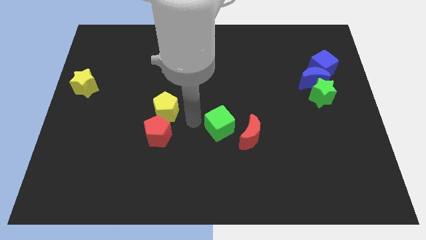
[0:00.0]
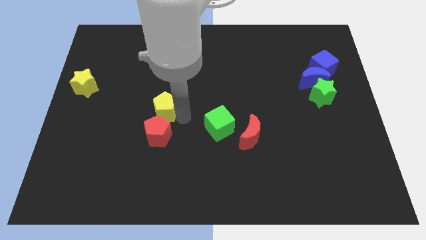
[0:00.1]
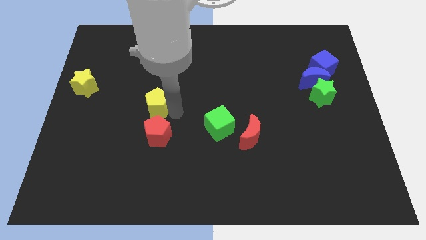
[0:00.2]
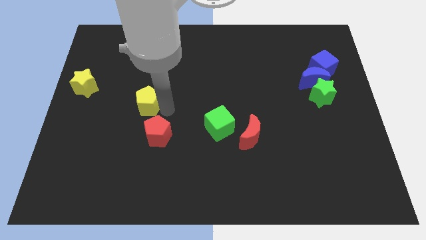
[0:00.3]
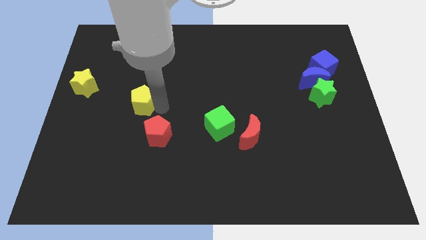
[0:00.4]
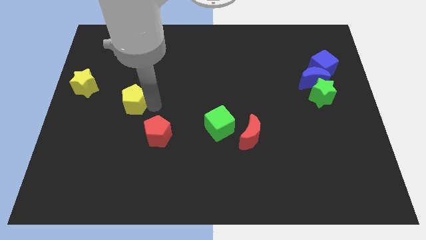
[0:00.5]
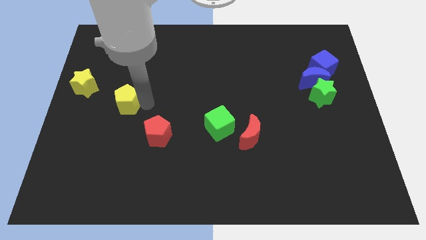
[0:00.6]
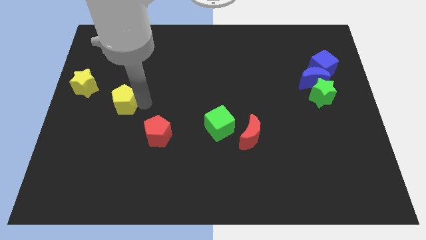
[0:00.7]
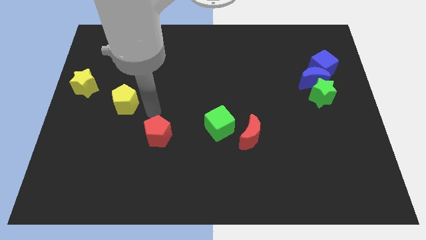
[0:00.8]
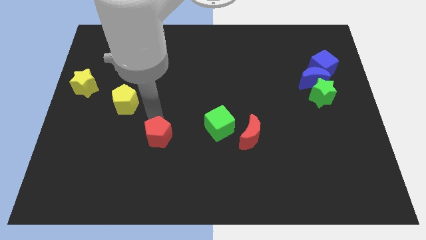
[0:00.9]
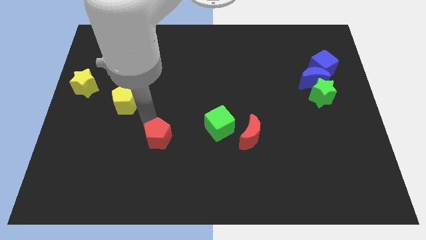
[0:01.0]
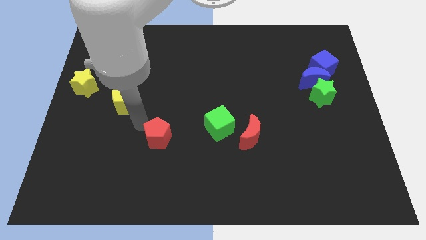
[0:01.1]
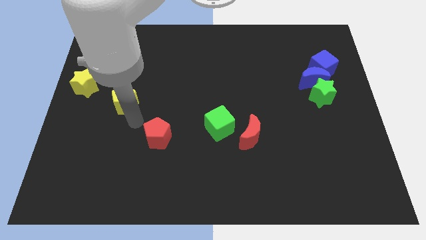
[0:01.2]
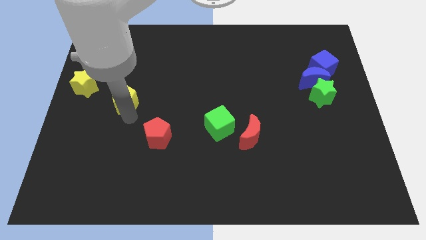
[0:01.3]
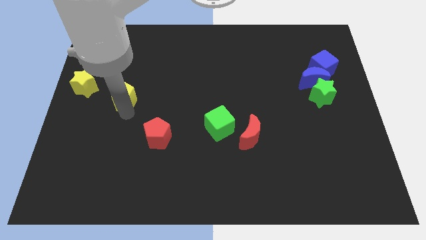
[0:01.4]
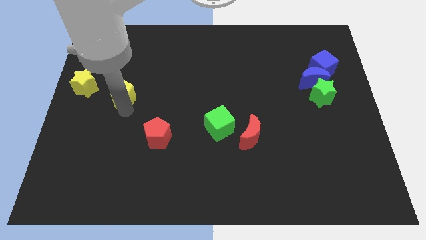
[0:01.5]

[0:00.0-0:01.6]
separate the yellow pentagon from the red pentagon

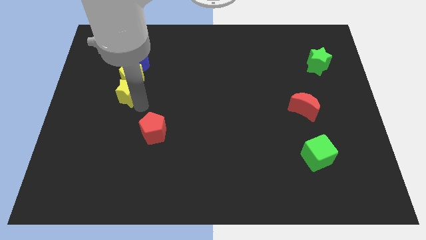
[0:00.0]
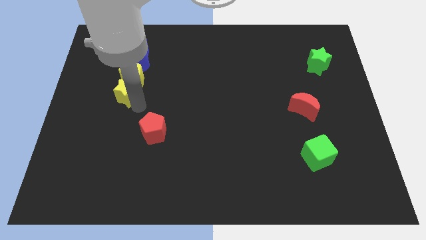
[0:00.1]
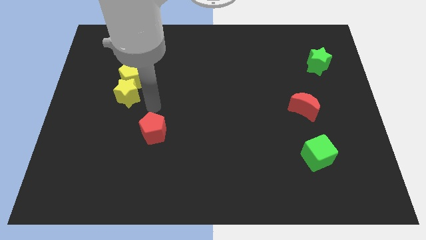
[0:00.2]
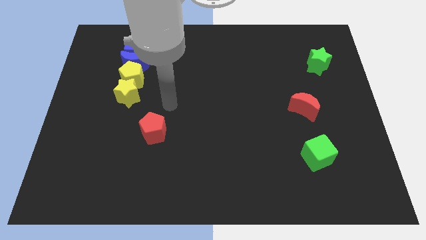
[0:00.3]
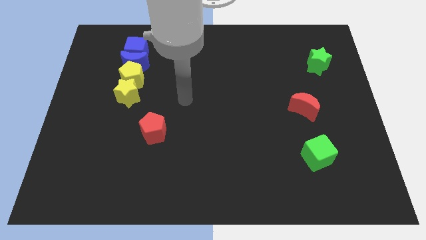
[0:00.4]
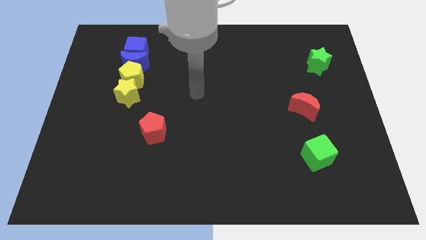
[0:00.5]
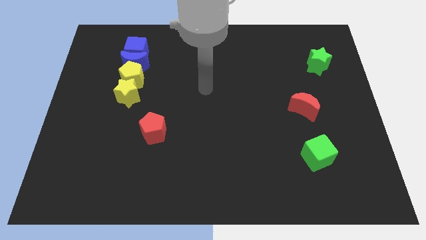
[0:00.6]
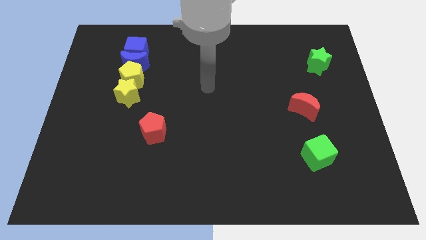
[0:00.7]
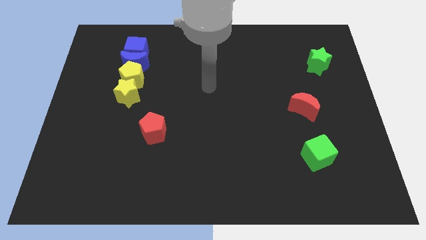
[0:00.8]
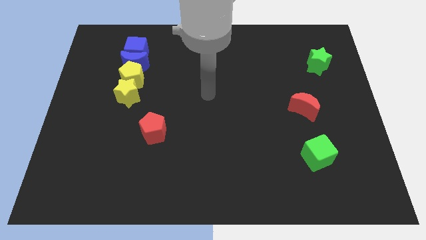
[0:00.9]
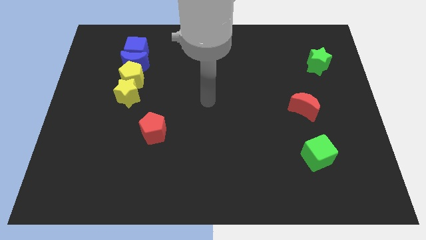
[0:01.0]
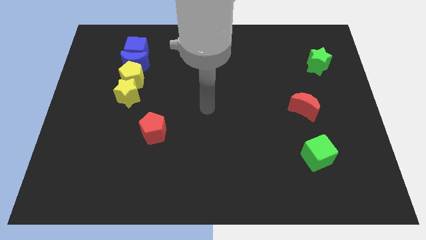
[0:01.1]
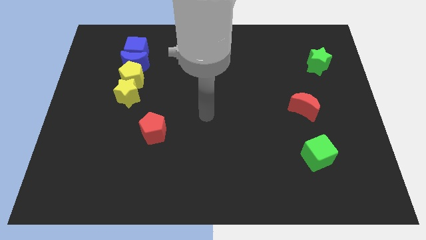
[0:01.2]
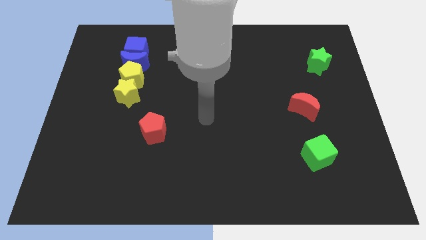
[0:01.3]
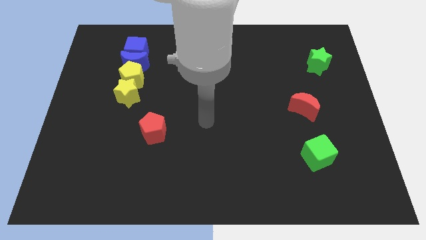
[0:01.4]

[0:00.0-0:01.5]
point your arm at the center of the board

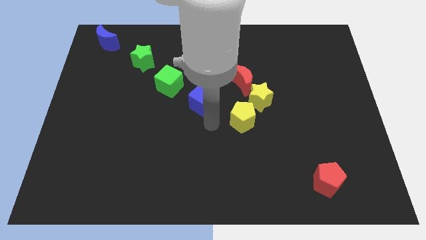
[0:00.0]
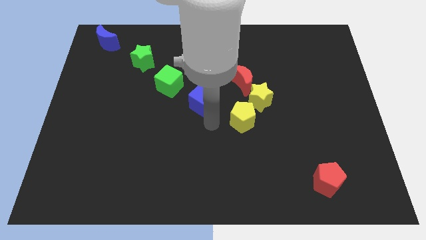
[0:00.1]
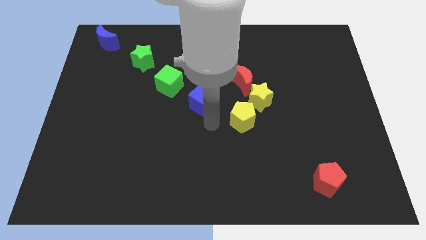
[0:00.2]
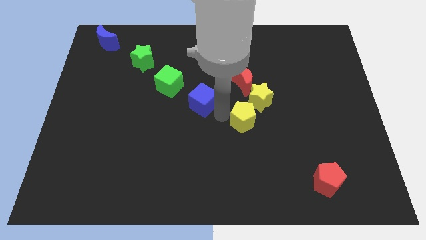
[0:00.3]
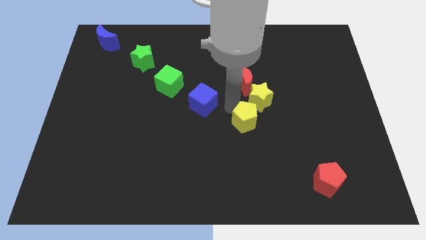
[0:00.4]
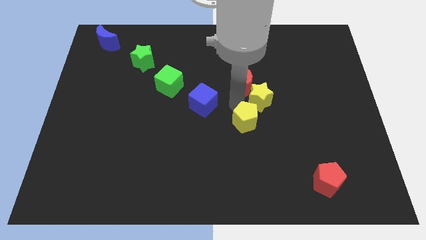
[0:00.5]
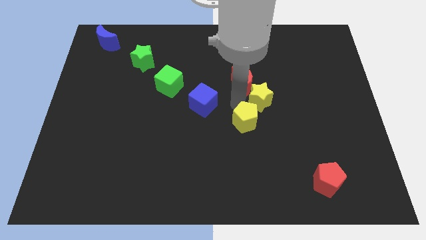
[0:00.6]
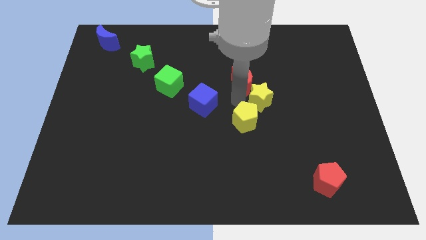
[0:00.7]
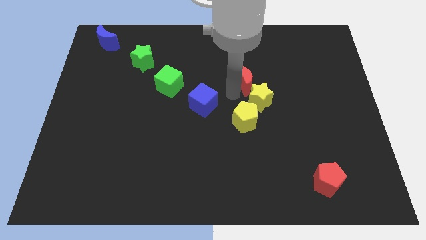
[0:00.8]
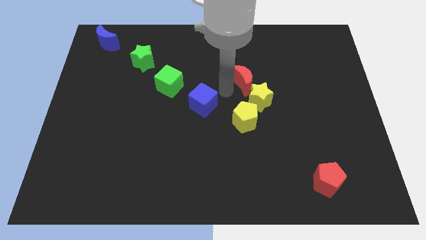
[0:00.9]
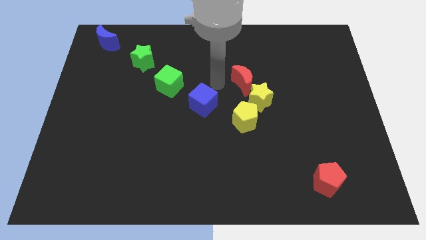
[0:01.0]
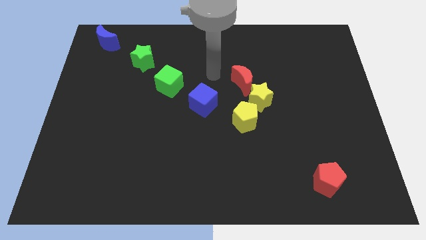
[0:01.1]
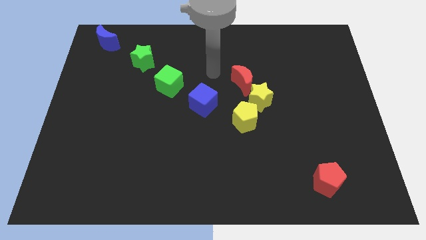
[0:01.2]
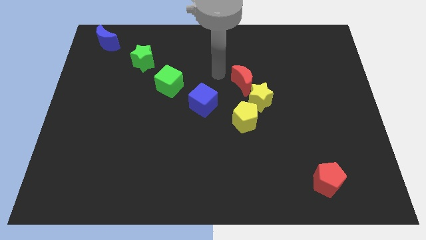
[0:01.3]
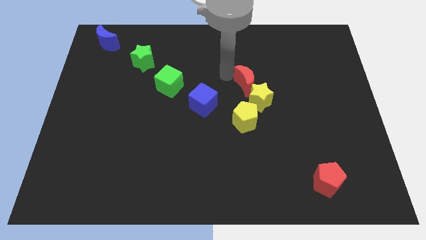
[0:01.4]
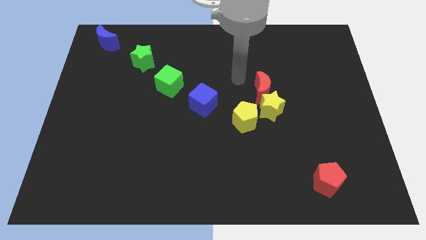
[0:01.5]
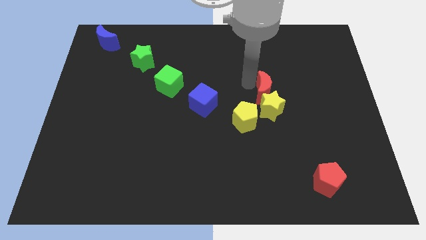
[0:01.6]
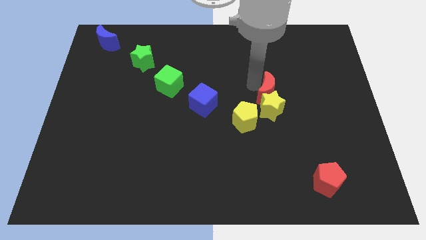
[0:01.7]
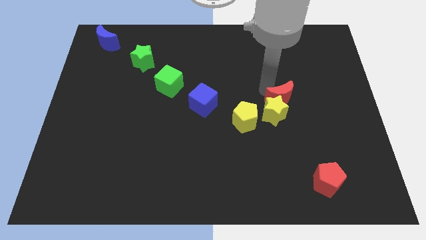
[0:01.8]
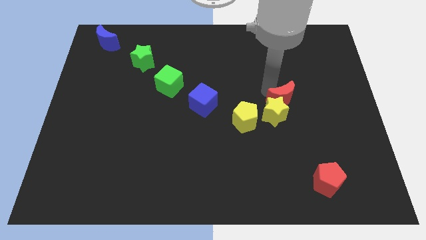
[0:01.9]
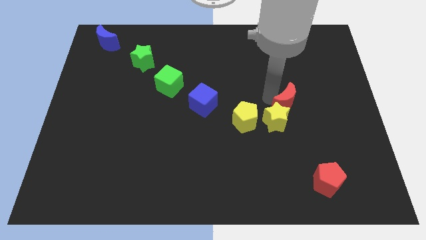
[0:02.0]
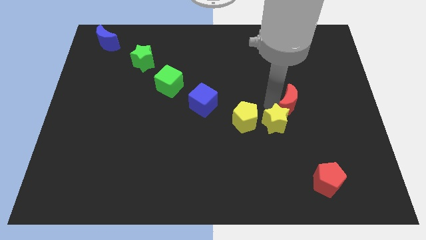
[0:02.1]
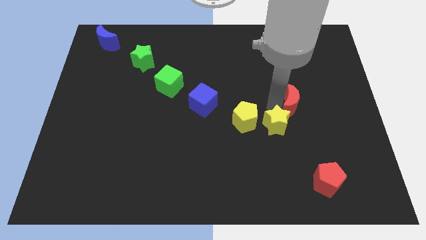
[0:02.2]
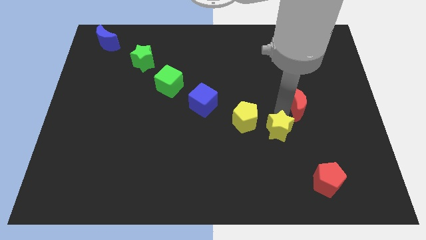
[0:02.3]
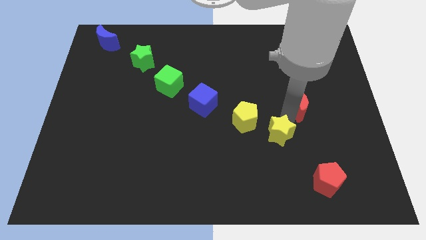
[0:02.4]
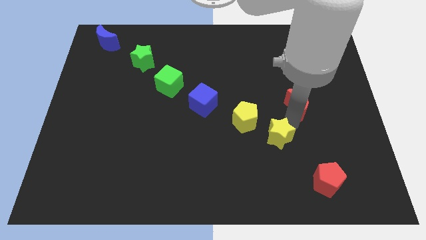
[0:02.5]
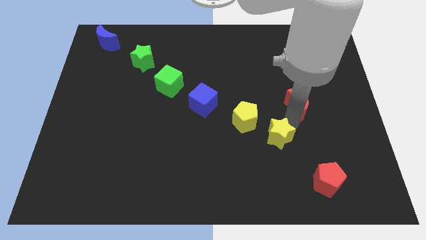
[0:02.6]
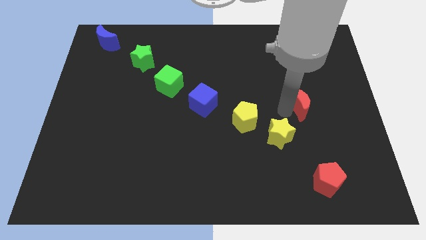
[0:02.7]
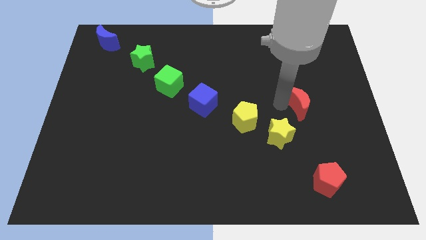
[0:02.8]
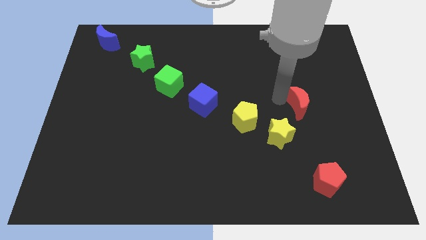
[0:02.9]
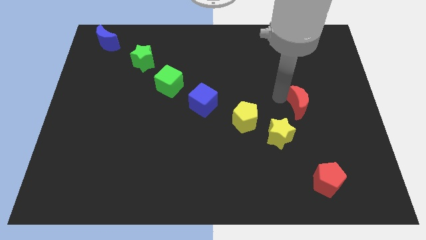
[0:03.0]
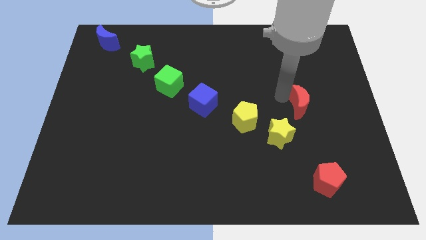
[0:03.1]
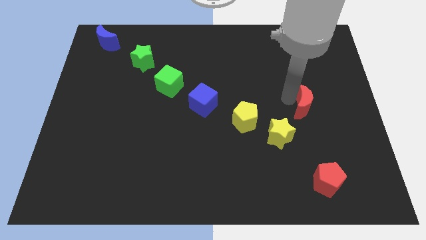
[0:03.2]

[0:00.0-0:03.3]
separate red moon and yellow star from each other

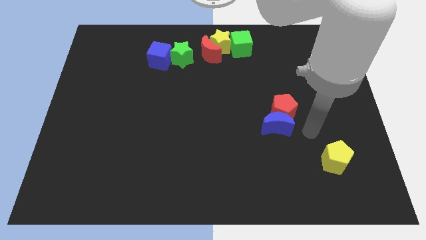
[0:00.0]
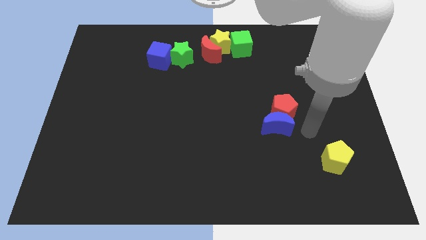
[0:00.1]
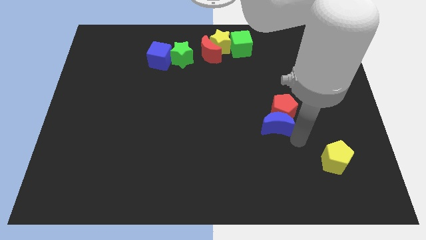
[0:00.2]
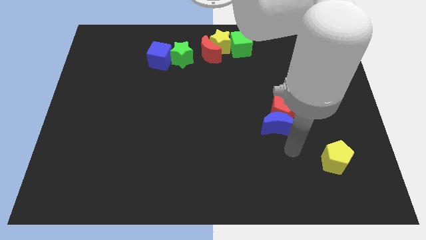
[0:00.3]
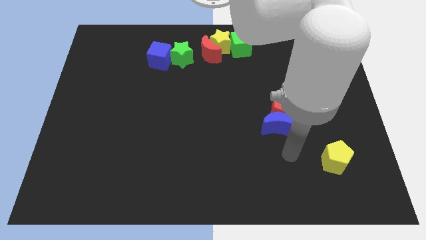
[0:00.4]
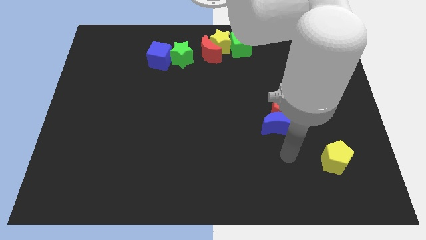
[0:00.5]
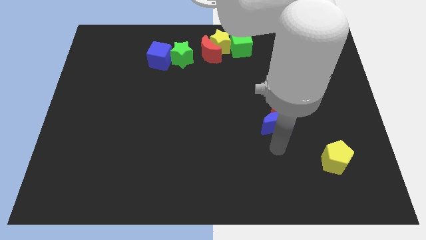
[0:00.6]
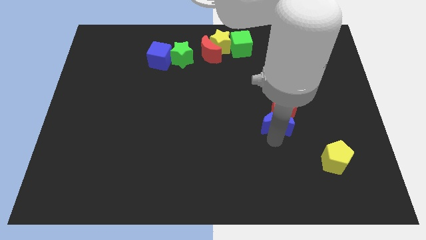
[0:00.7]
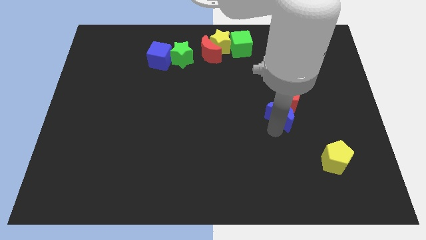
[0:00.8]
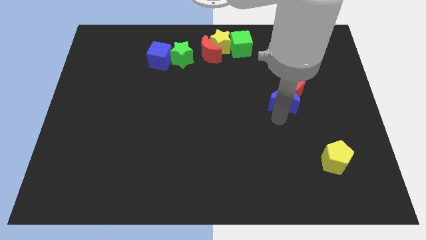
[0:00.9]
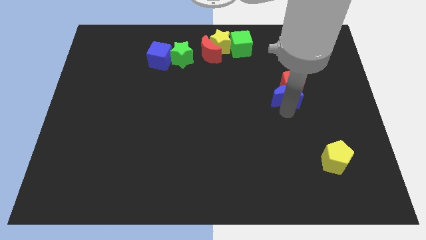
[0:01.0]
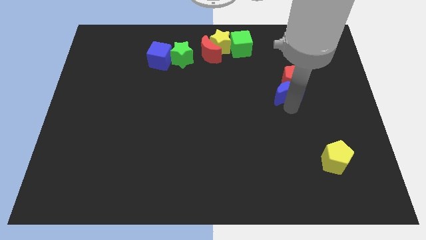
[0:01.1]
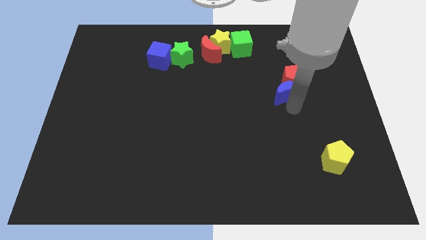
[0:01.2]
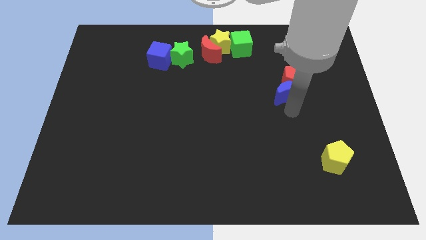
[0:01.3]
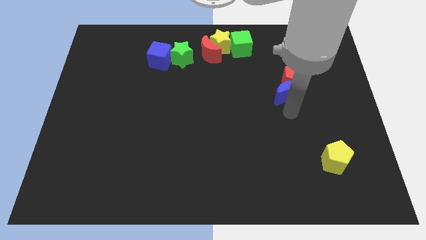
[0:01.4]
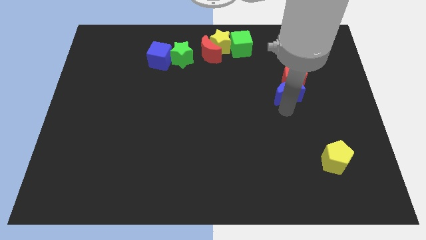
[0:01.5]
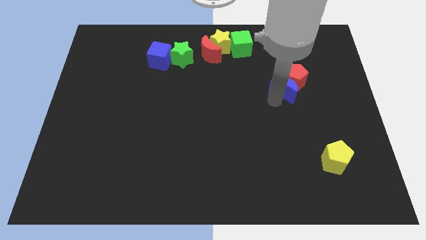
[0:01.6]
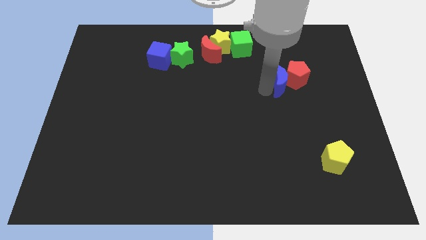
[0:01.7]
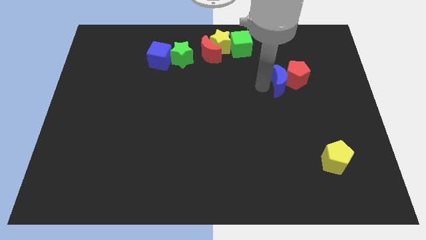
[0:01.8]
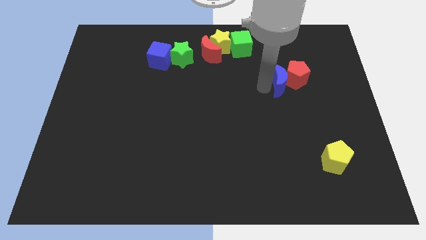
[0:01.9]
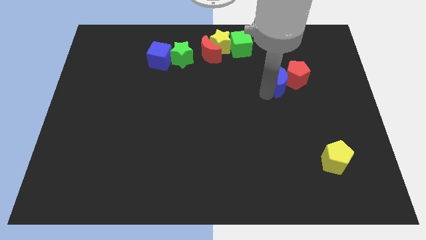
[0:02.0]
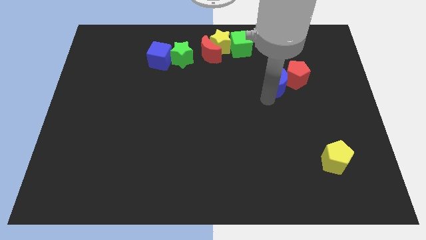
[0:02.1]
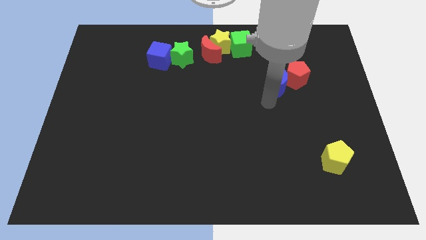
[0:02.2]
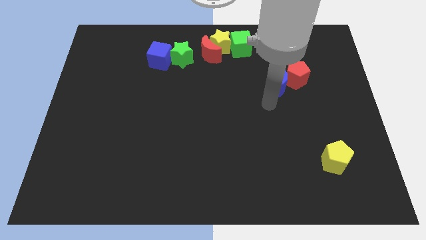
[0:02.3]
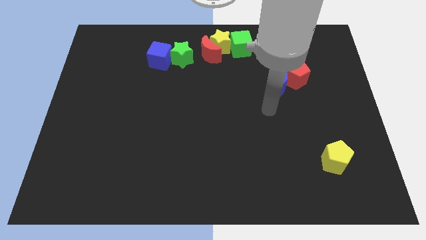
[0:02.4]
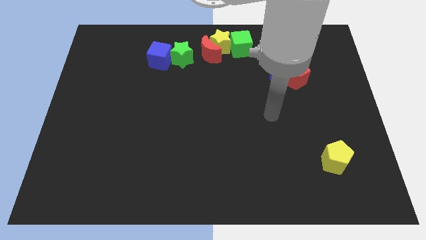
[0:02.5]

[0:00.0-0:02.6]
push the blue moon with red pentagon diagonal below the green cube
